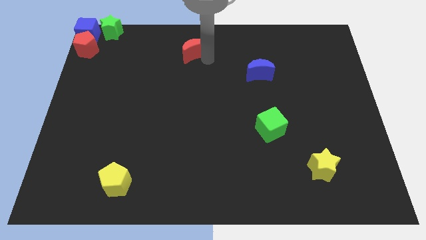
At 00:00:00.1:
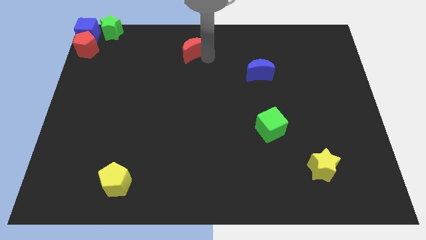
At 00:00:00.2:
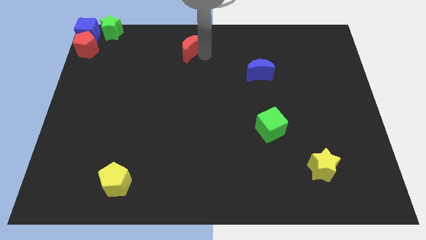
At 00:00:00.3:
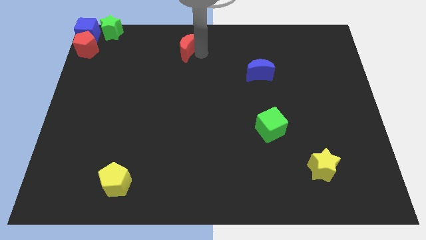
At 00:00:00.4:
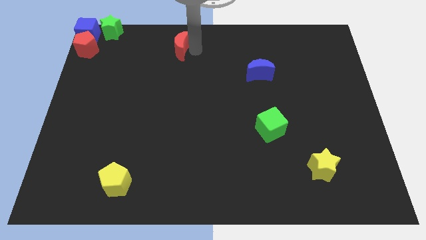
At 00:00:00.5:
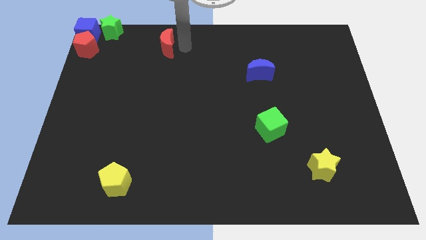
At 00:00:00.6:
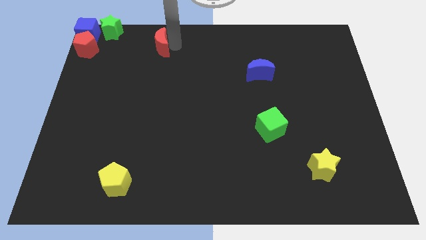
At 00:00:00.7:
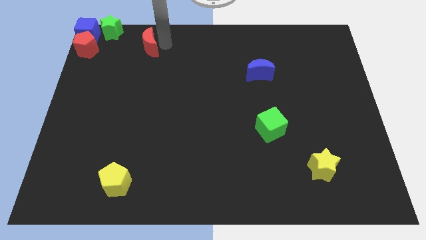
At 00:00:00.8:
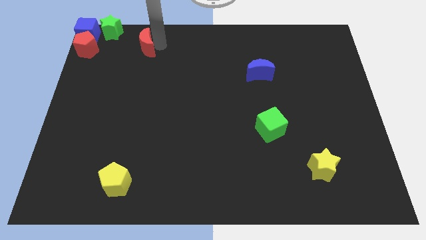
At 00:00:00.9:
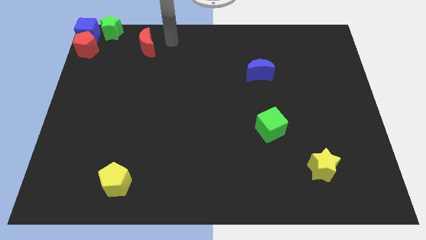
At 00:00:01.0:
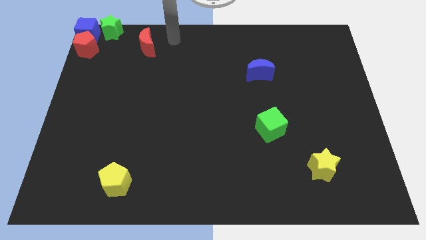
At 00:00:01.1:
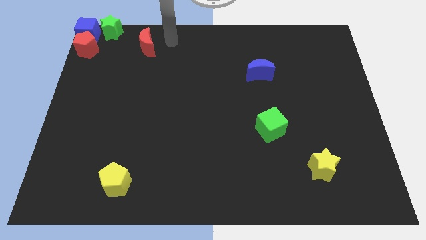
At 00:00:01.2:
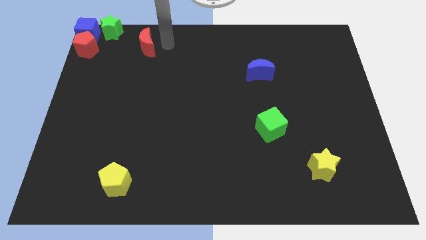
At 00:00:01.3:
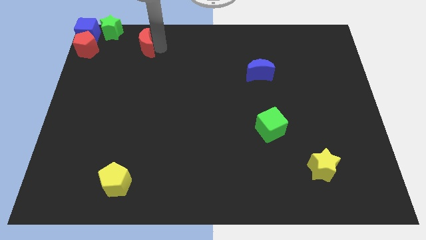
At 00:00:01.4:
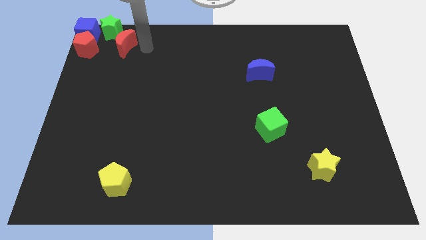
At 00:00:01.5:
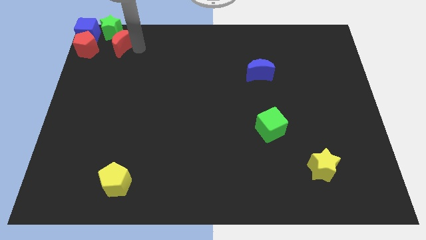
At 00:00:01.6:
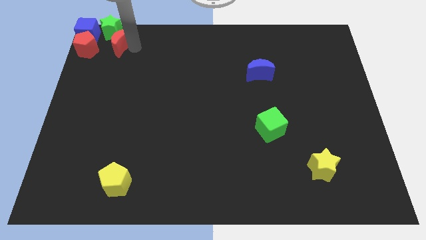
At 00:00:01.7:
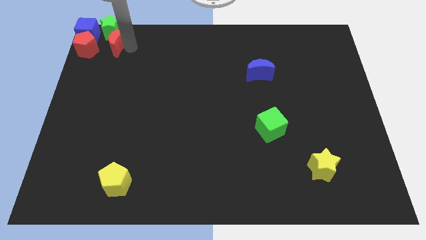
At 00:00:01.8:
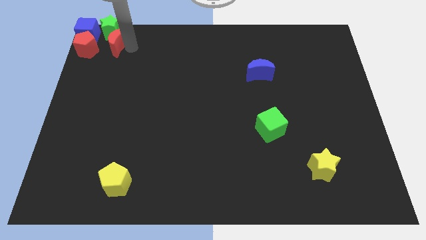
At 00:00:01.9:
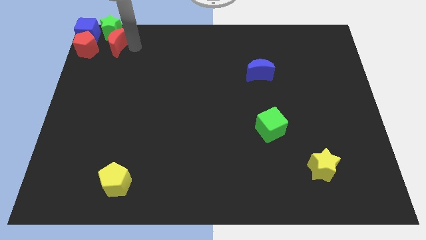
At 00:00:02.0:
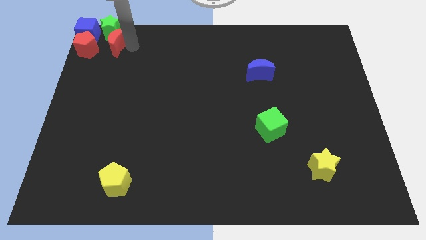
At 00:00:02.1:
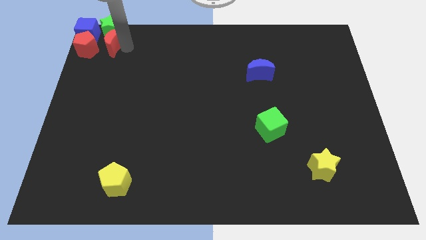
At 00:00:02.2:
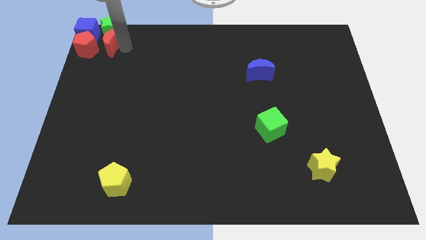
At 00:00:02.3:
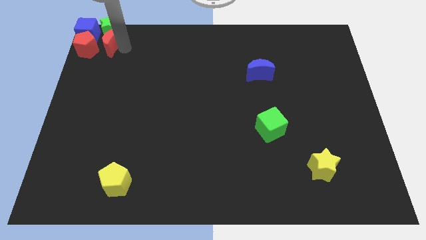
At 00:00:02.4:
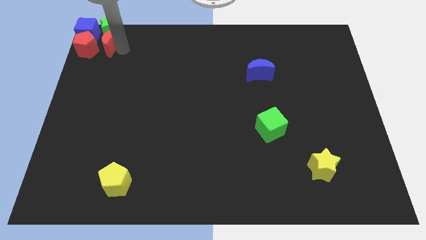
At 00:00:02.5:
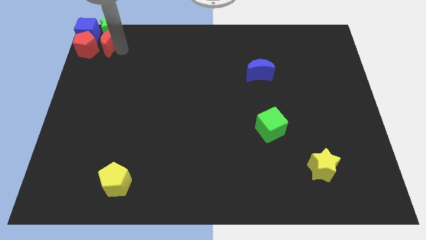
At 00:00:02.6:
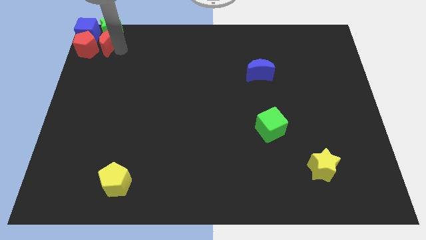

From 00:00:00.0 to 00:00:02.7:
move the red moon towards the left corner side blocks

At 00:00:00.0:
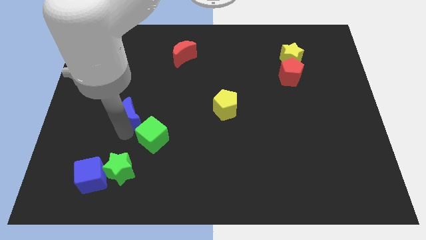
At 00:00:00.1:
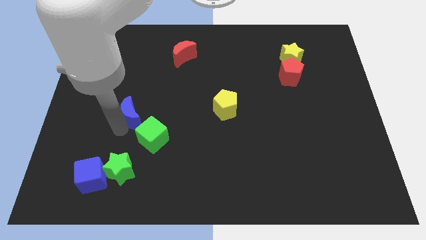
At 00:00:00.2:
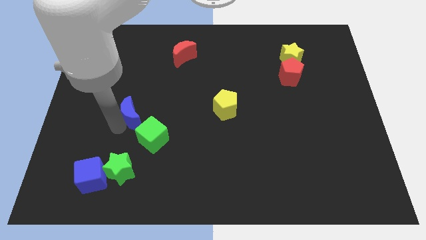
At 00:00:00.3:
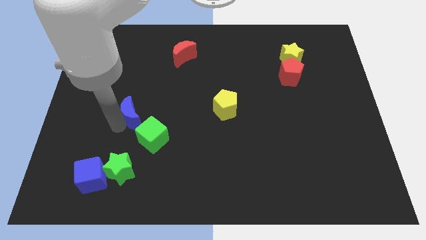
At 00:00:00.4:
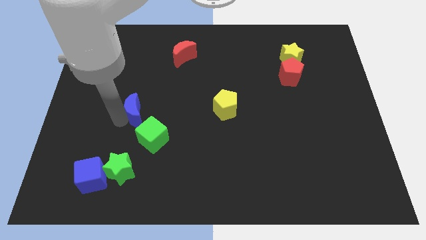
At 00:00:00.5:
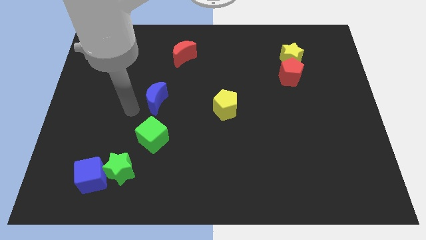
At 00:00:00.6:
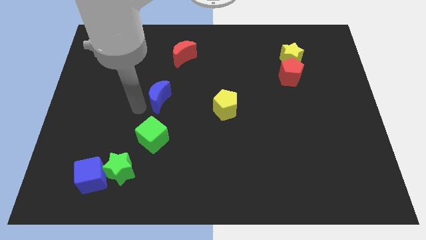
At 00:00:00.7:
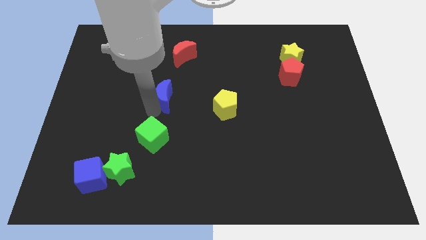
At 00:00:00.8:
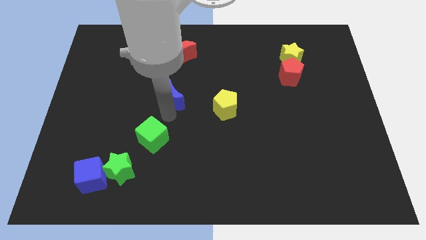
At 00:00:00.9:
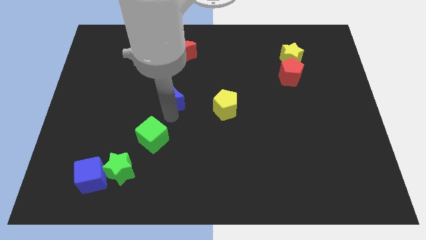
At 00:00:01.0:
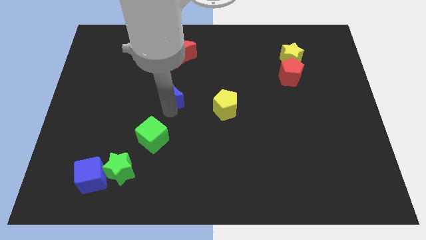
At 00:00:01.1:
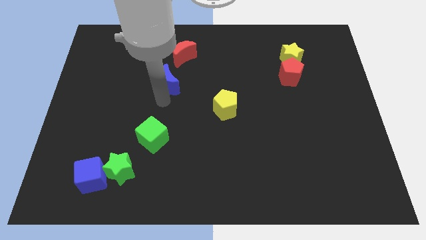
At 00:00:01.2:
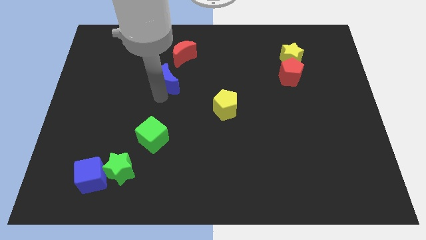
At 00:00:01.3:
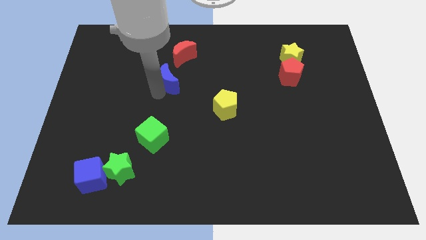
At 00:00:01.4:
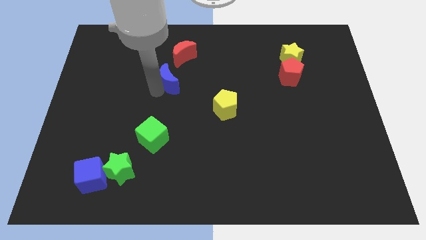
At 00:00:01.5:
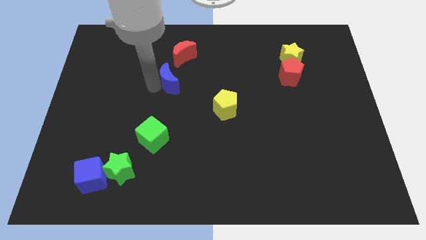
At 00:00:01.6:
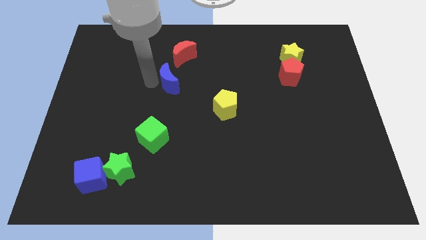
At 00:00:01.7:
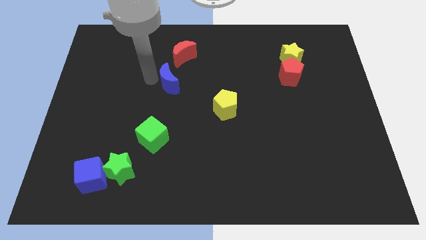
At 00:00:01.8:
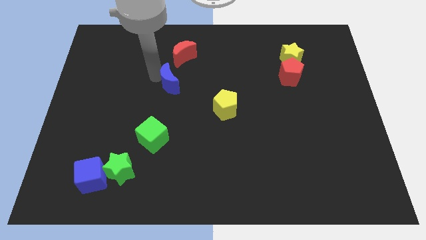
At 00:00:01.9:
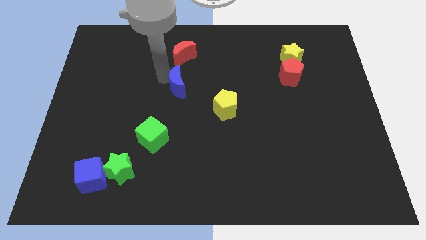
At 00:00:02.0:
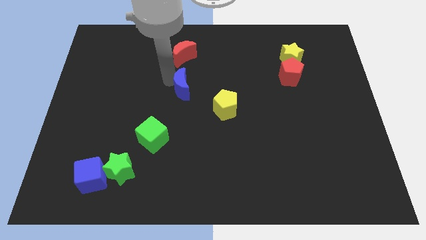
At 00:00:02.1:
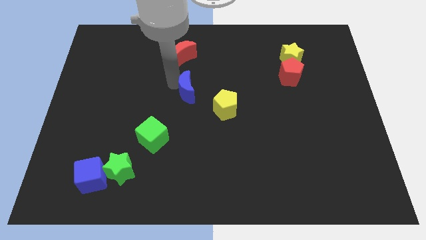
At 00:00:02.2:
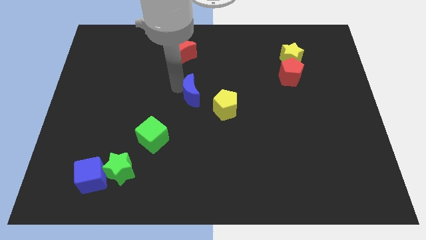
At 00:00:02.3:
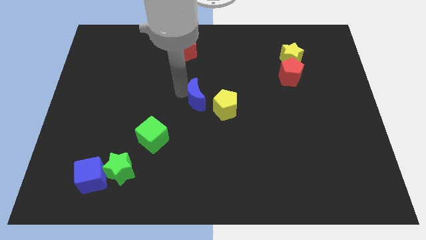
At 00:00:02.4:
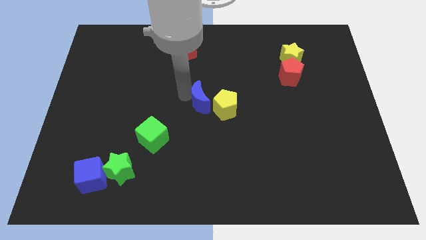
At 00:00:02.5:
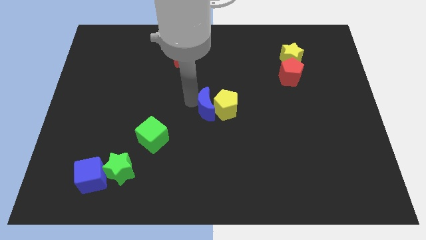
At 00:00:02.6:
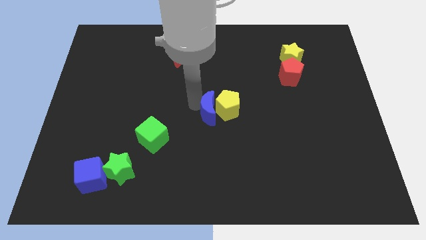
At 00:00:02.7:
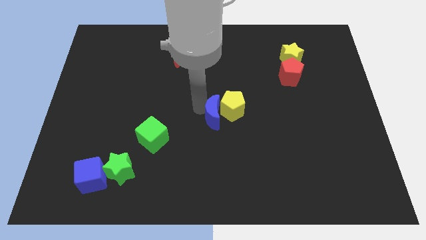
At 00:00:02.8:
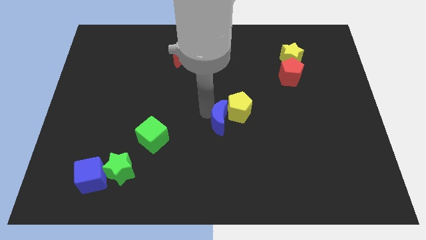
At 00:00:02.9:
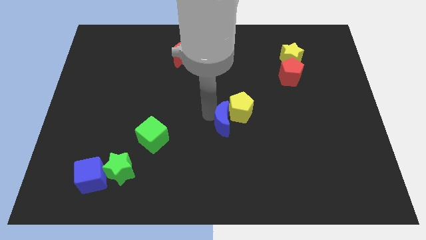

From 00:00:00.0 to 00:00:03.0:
place the blue crescent beside the yellow pentagon

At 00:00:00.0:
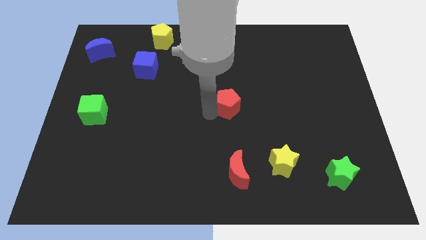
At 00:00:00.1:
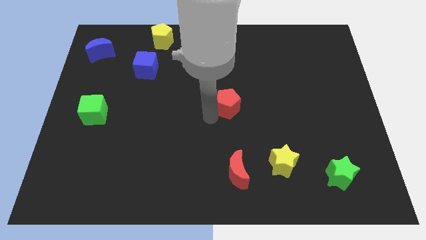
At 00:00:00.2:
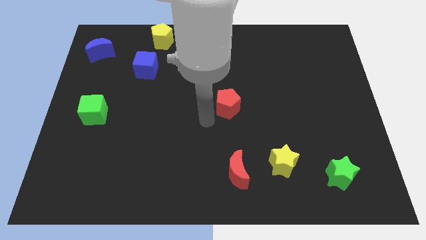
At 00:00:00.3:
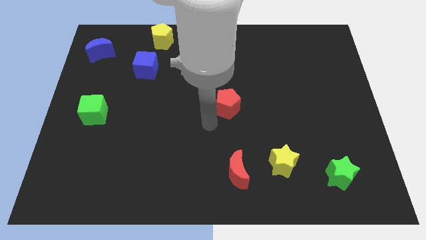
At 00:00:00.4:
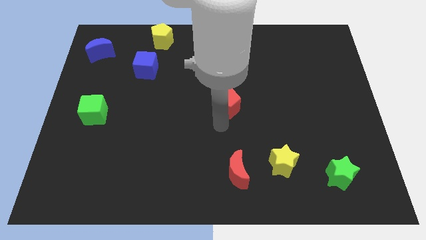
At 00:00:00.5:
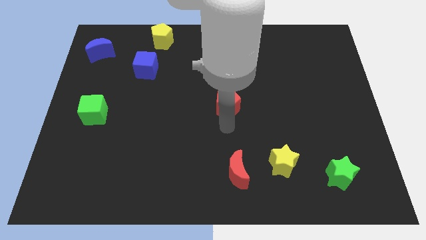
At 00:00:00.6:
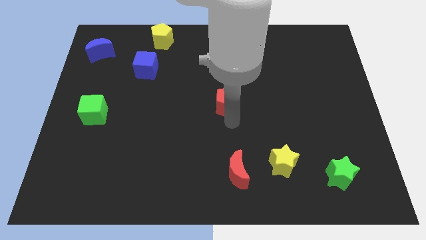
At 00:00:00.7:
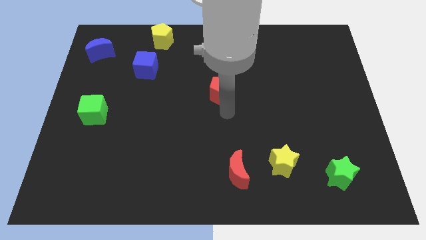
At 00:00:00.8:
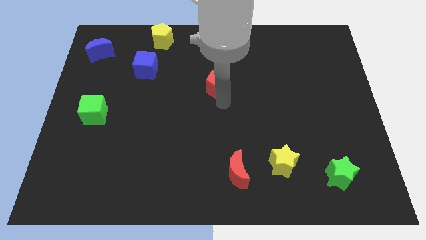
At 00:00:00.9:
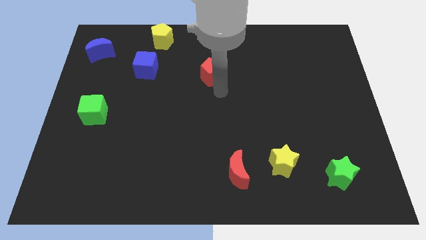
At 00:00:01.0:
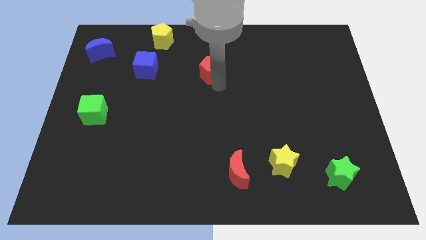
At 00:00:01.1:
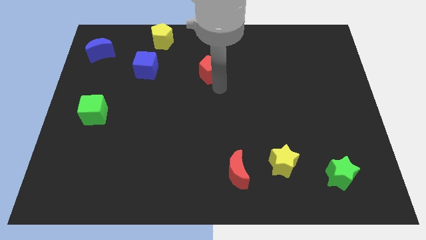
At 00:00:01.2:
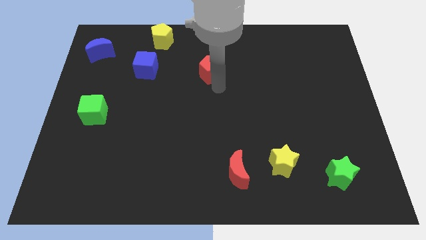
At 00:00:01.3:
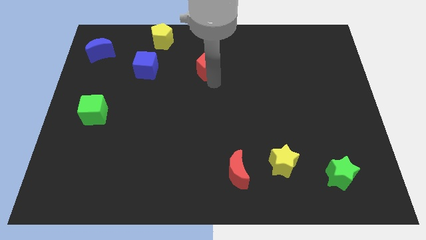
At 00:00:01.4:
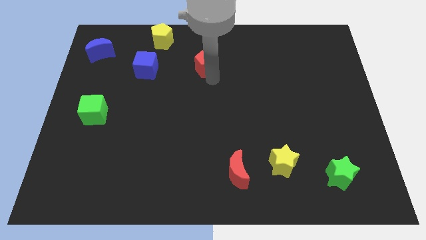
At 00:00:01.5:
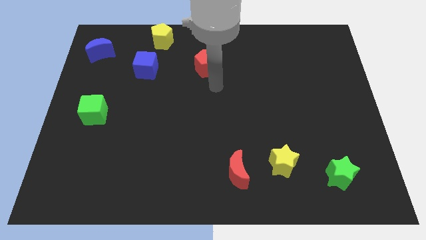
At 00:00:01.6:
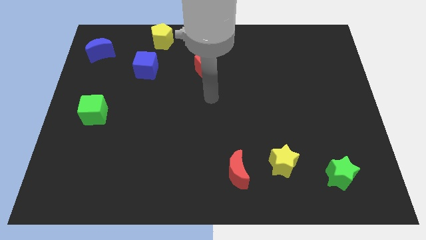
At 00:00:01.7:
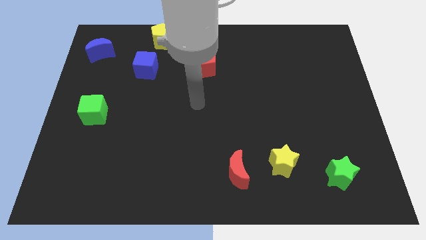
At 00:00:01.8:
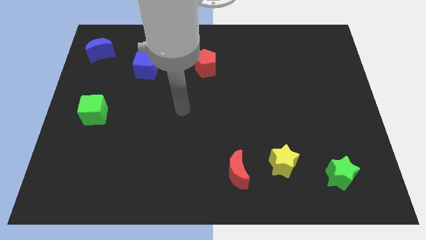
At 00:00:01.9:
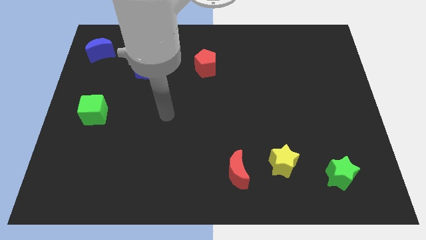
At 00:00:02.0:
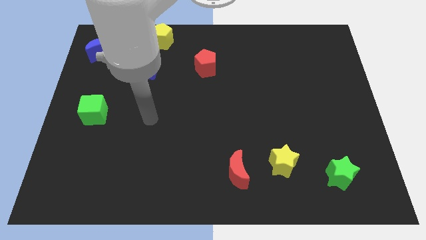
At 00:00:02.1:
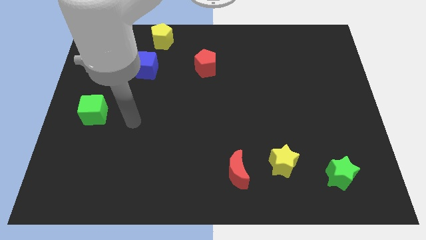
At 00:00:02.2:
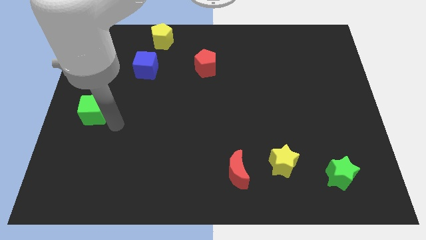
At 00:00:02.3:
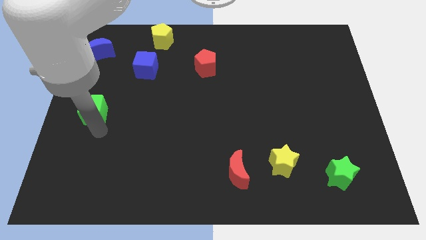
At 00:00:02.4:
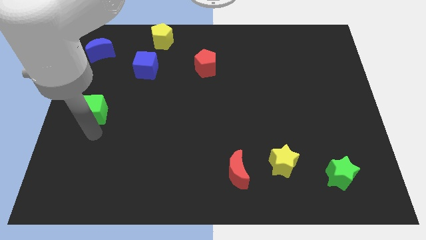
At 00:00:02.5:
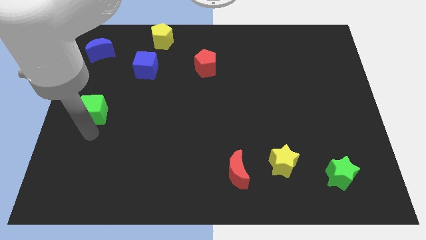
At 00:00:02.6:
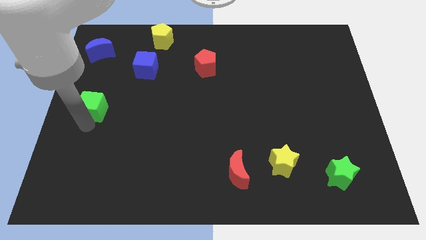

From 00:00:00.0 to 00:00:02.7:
place the red pentagon parallel to the blue cube

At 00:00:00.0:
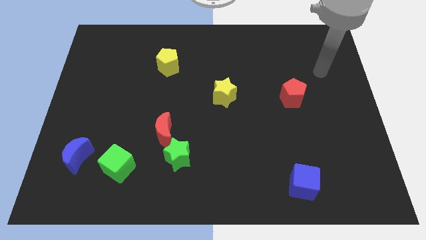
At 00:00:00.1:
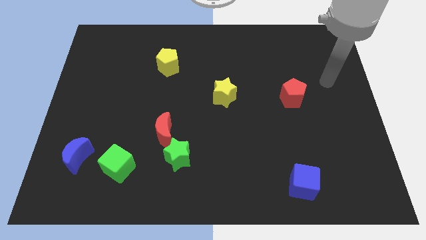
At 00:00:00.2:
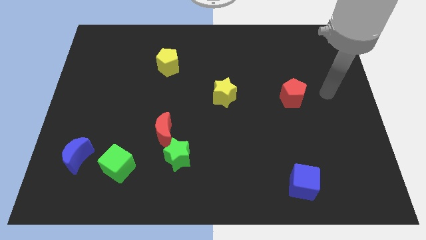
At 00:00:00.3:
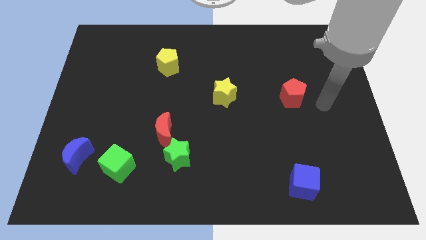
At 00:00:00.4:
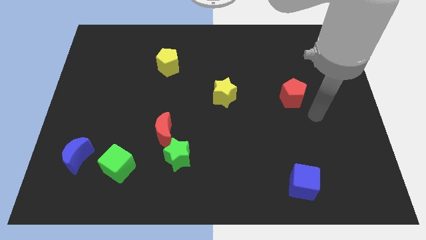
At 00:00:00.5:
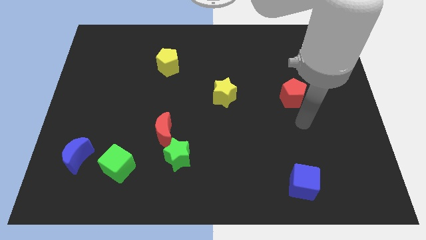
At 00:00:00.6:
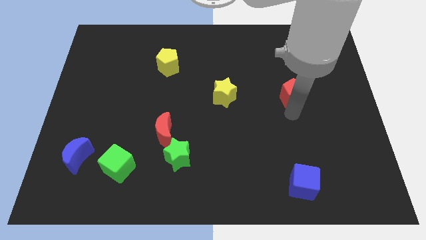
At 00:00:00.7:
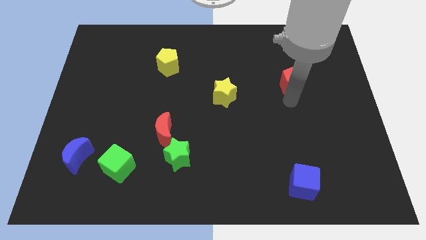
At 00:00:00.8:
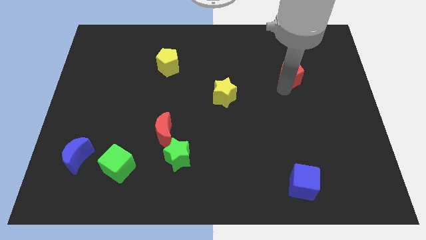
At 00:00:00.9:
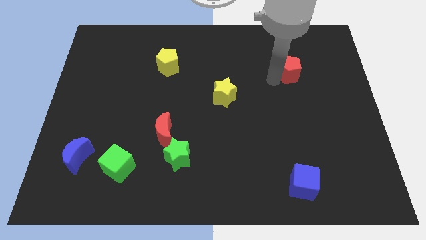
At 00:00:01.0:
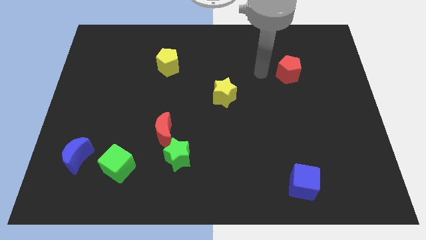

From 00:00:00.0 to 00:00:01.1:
move red pentagon to the top right of yellow star
